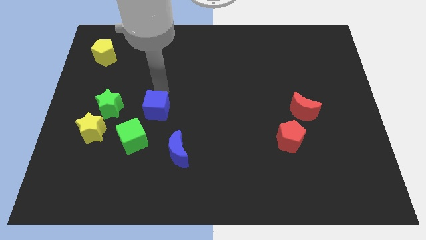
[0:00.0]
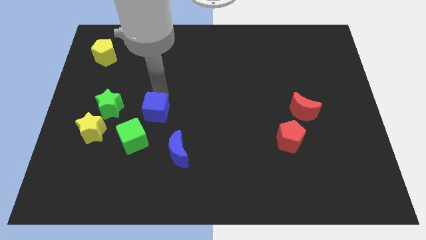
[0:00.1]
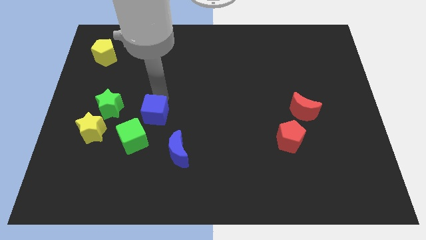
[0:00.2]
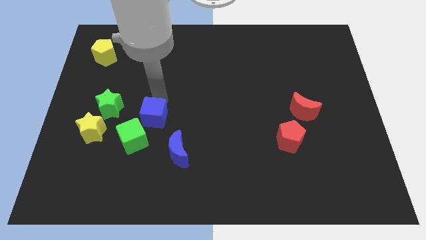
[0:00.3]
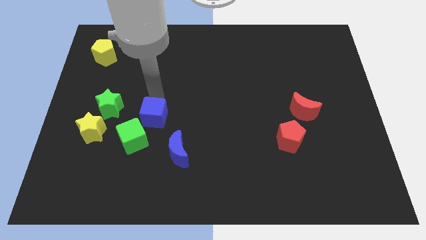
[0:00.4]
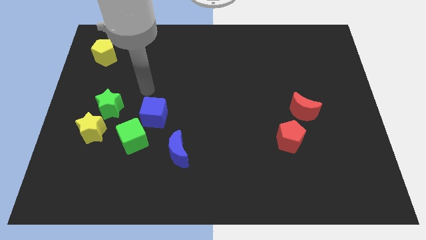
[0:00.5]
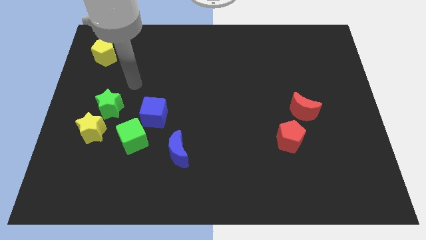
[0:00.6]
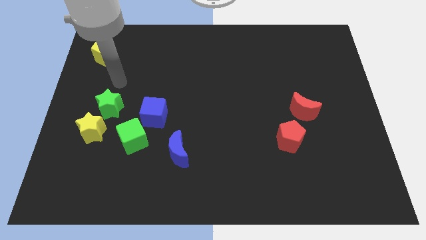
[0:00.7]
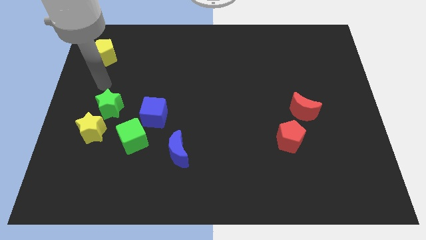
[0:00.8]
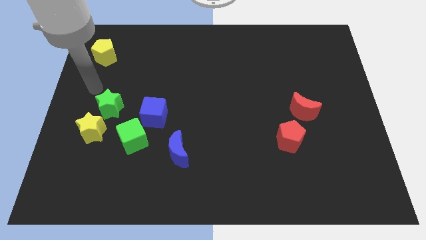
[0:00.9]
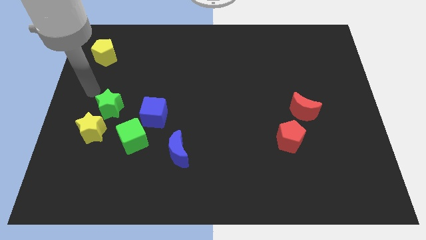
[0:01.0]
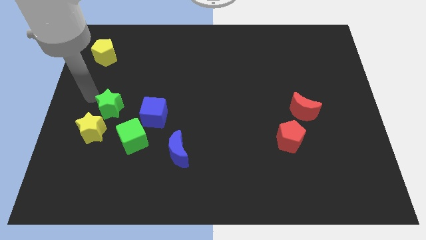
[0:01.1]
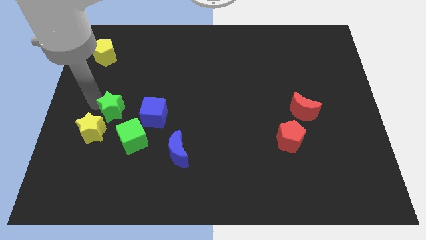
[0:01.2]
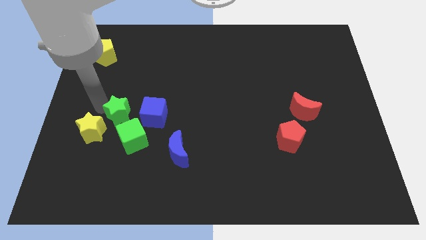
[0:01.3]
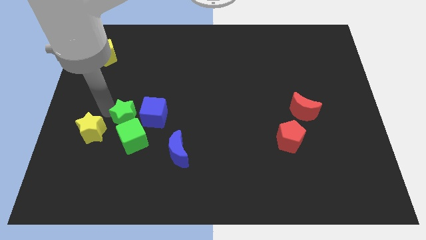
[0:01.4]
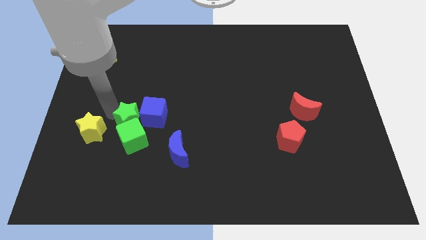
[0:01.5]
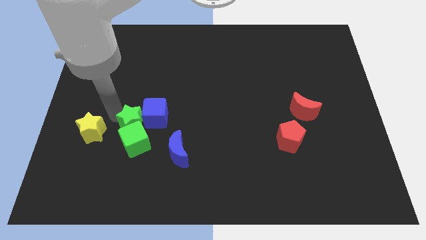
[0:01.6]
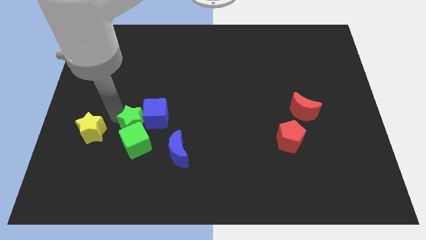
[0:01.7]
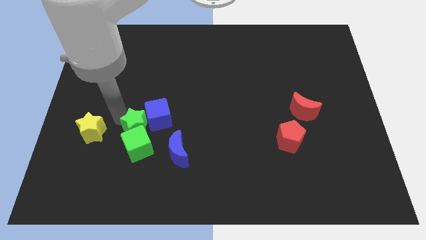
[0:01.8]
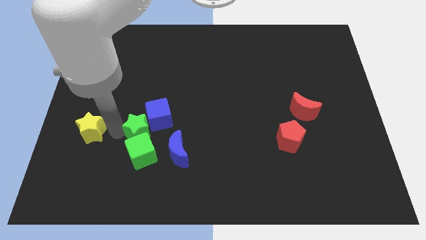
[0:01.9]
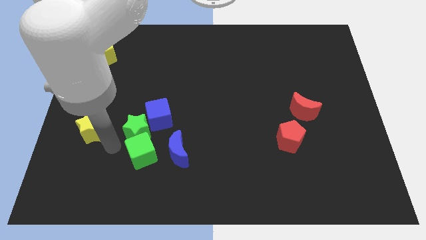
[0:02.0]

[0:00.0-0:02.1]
push the green star into the green cube

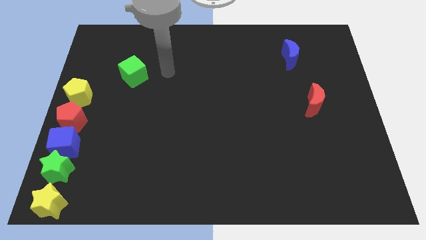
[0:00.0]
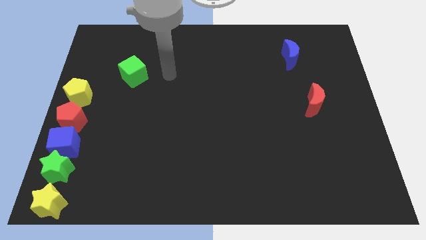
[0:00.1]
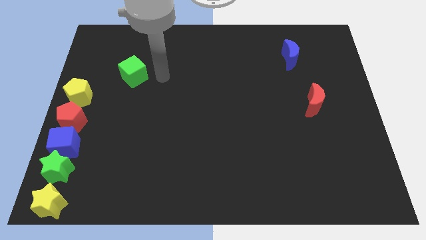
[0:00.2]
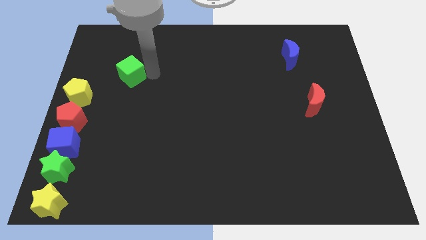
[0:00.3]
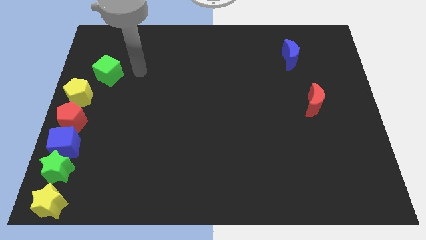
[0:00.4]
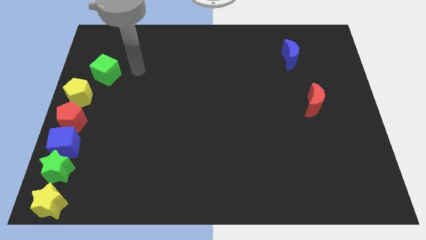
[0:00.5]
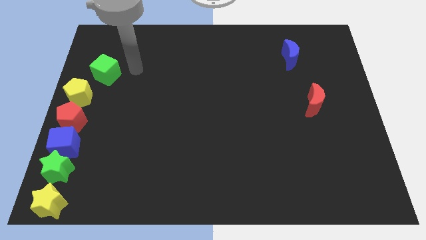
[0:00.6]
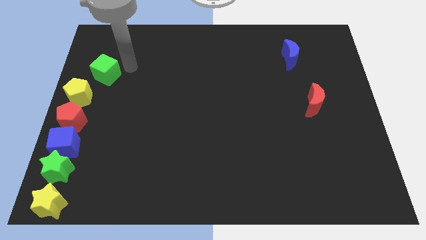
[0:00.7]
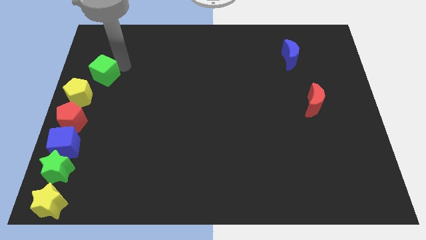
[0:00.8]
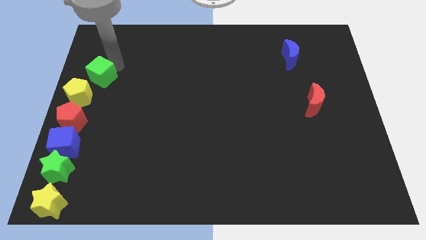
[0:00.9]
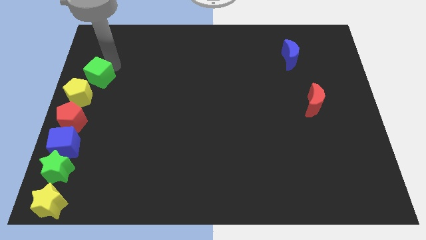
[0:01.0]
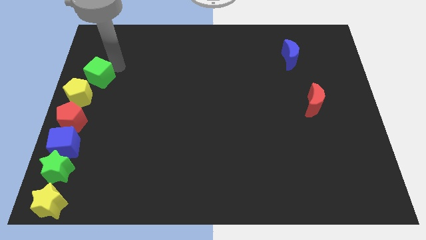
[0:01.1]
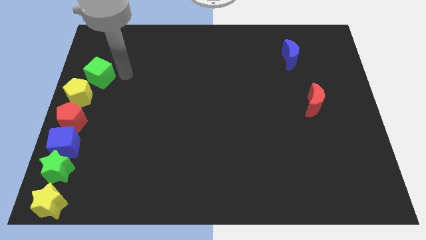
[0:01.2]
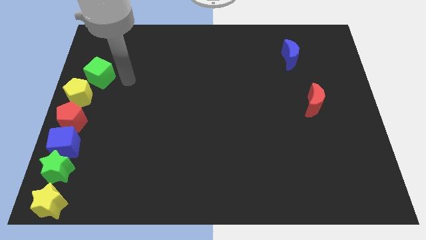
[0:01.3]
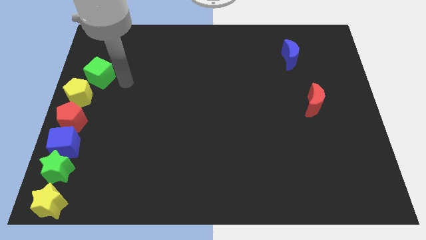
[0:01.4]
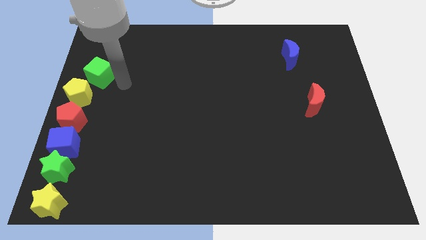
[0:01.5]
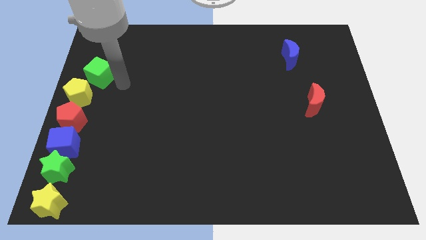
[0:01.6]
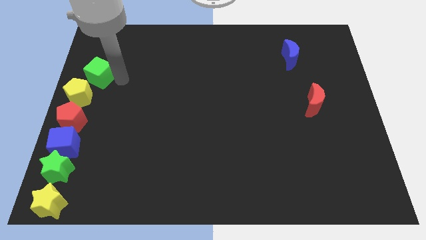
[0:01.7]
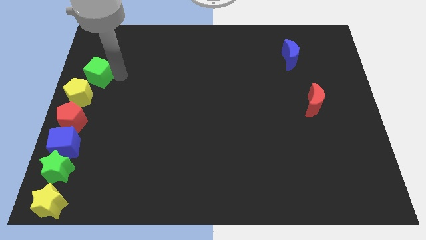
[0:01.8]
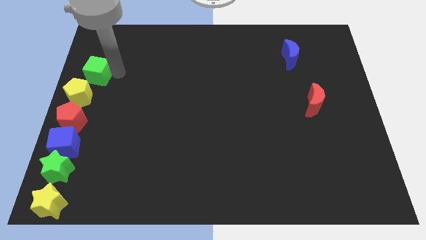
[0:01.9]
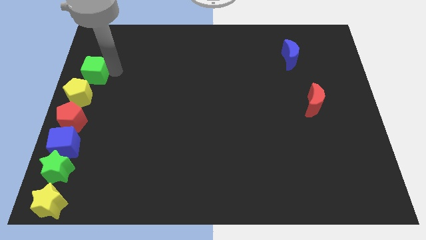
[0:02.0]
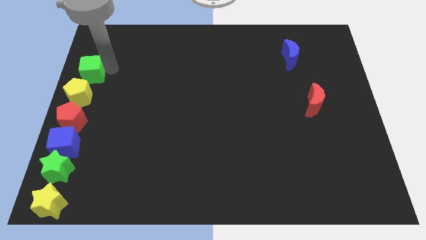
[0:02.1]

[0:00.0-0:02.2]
drag green cube into yellow pentagon

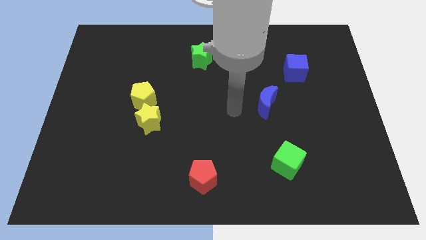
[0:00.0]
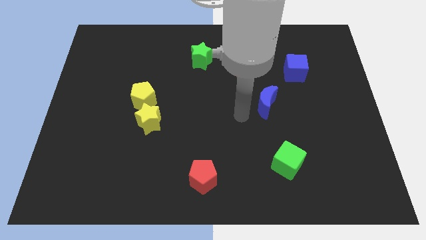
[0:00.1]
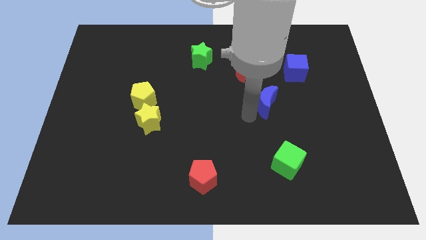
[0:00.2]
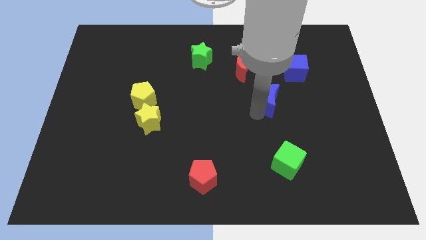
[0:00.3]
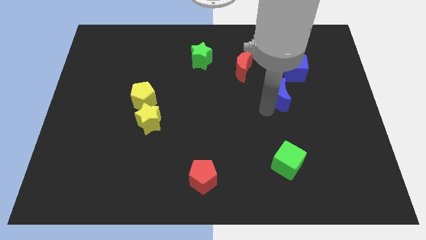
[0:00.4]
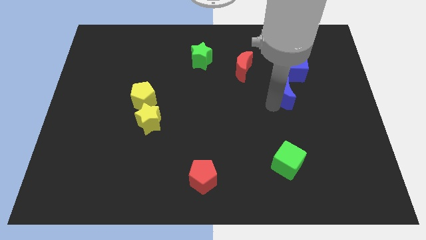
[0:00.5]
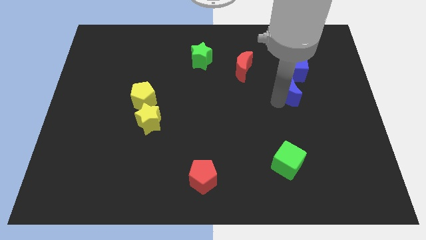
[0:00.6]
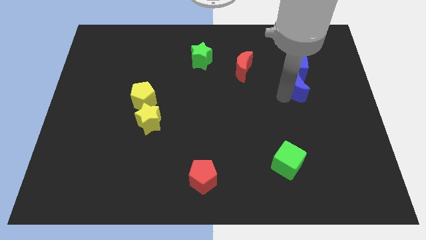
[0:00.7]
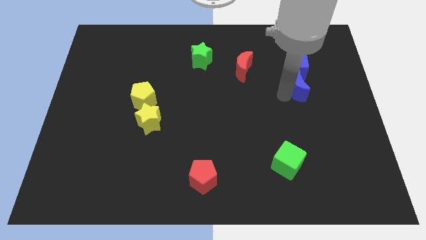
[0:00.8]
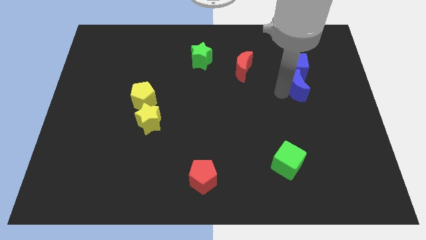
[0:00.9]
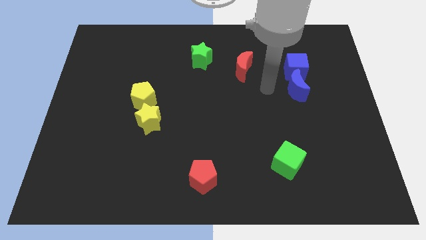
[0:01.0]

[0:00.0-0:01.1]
place blue moon below the blue cube

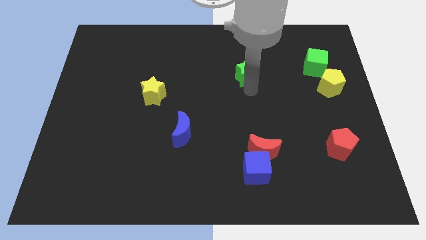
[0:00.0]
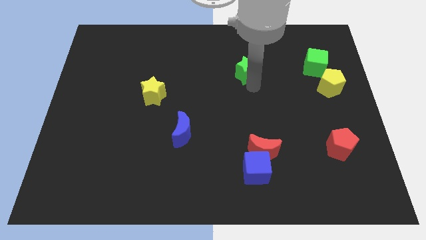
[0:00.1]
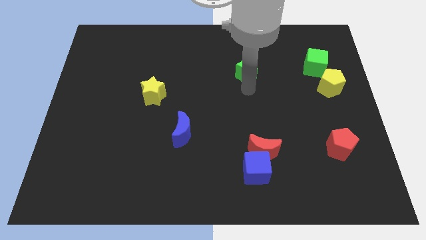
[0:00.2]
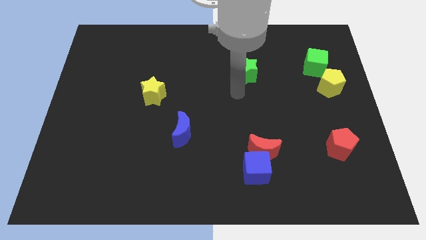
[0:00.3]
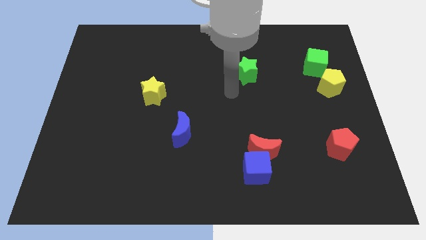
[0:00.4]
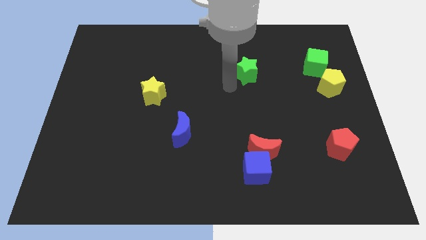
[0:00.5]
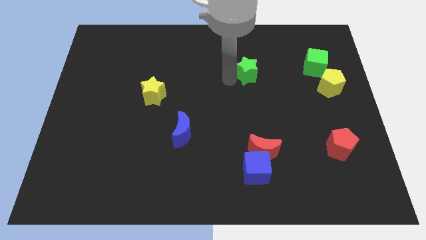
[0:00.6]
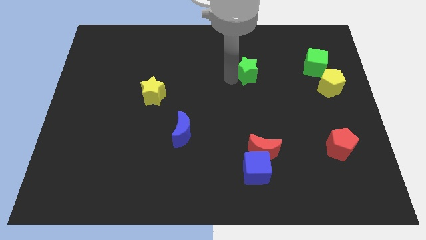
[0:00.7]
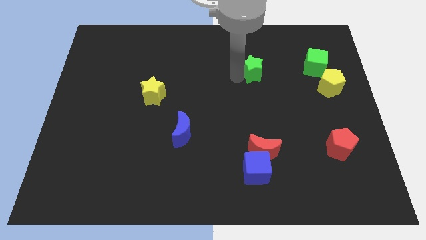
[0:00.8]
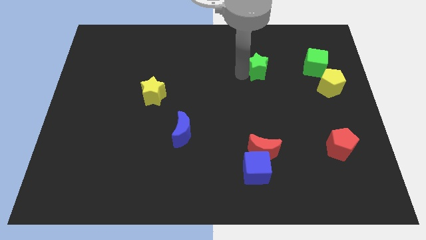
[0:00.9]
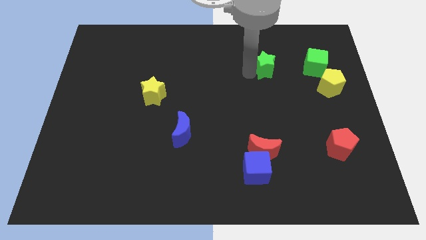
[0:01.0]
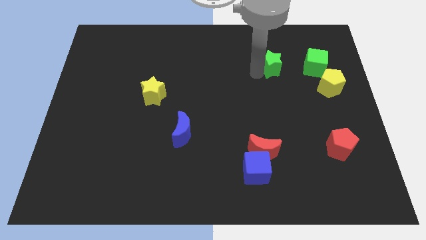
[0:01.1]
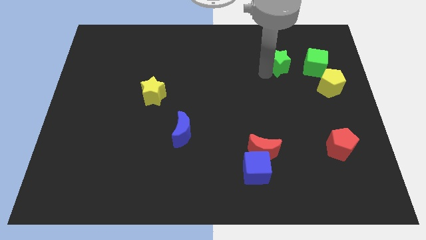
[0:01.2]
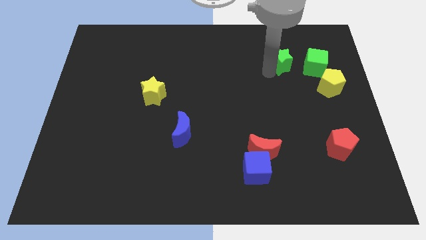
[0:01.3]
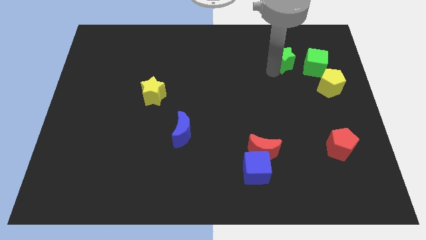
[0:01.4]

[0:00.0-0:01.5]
move green star towards green cube

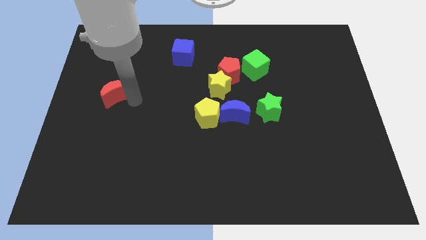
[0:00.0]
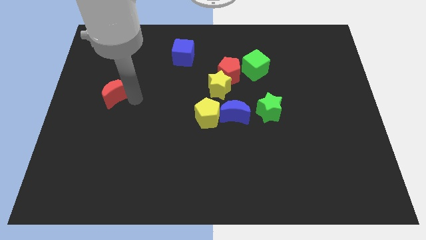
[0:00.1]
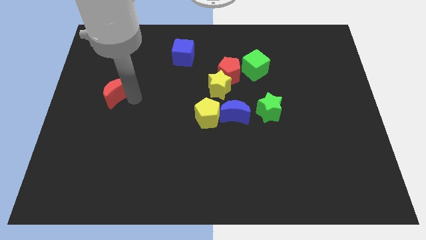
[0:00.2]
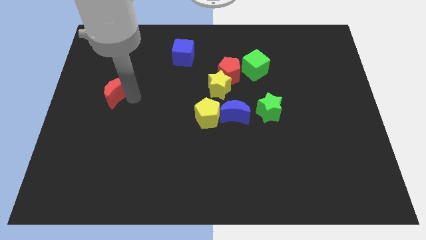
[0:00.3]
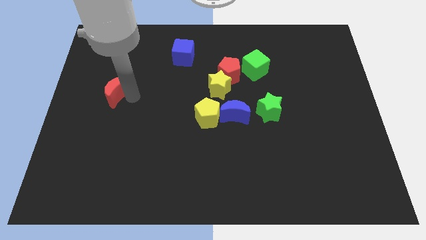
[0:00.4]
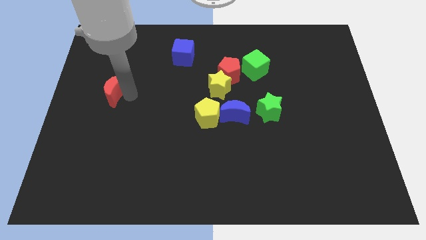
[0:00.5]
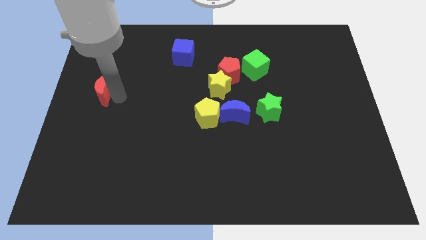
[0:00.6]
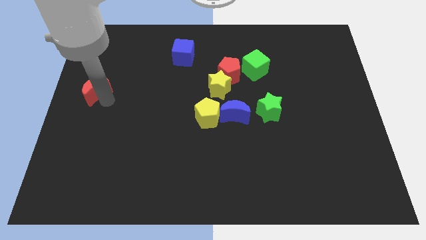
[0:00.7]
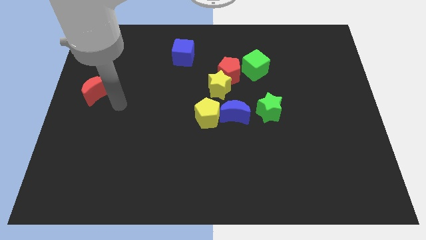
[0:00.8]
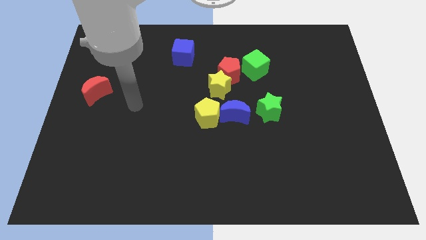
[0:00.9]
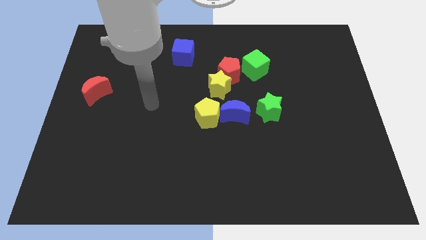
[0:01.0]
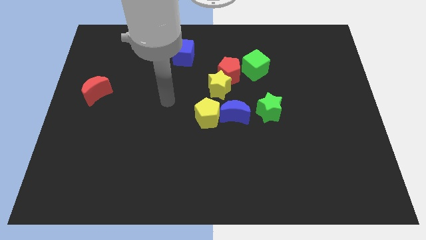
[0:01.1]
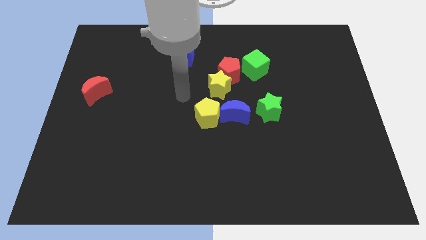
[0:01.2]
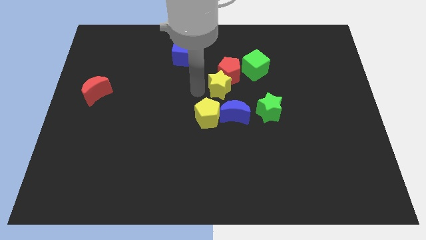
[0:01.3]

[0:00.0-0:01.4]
move the red crescent to the left of the board

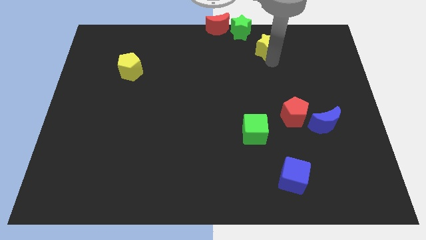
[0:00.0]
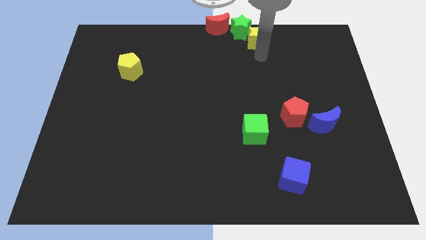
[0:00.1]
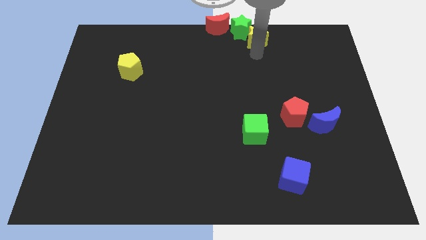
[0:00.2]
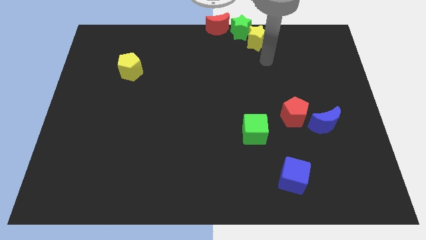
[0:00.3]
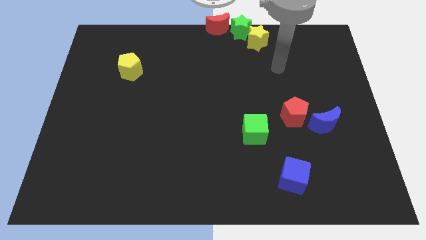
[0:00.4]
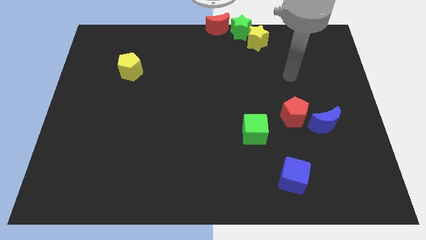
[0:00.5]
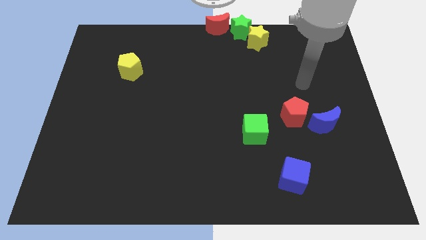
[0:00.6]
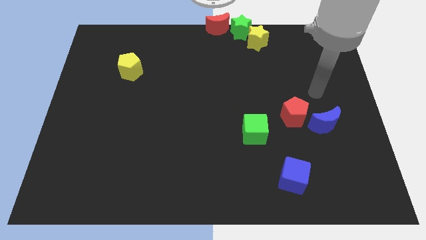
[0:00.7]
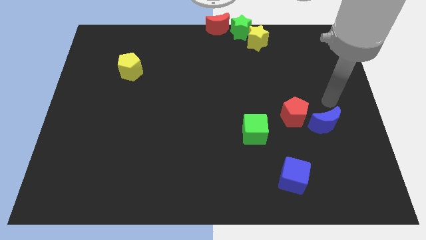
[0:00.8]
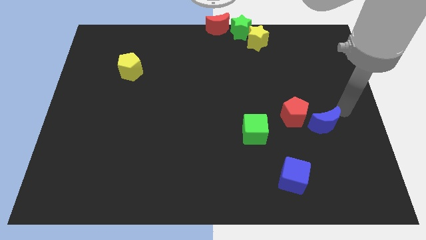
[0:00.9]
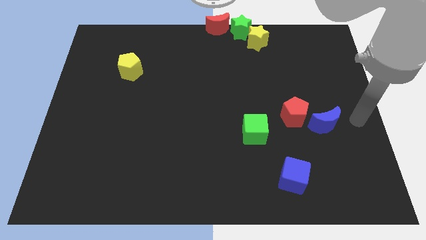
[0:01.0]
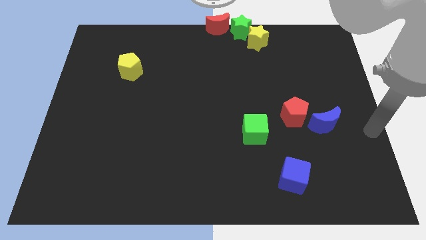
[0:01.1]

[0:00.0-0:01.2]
place the yellow star to the bottom right of green star
